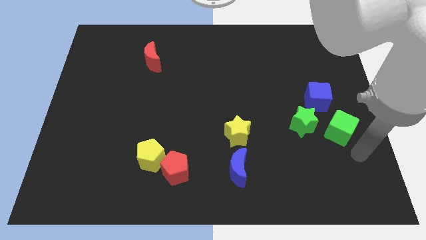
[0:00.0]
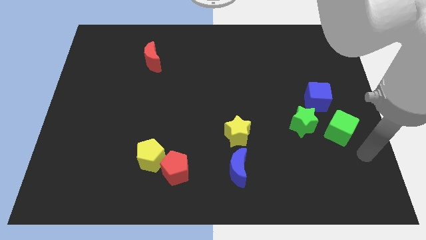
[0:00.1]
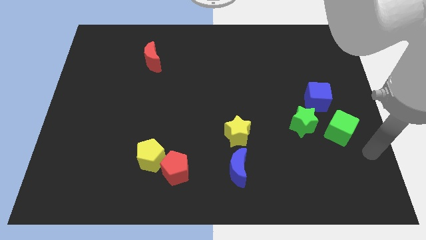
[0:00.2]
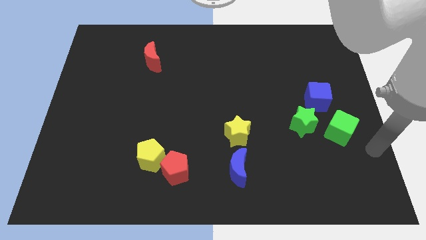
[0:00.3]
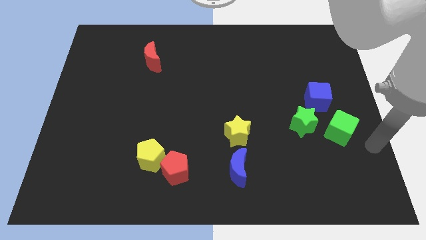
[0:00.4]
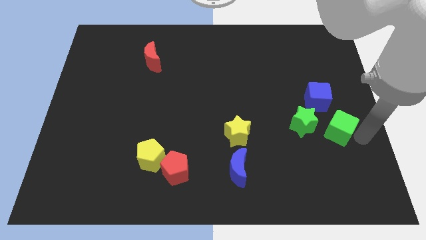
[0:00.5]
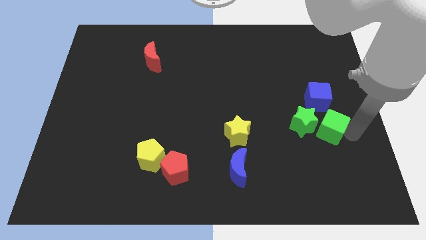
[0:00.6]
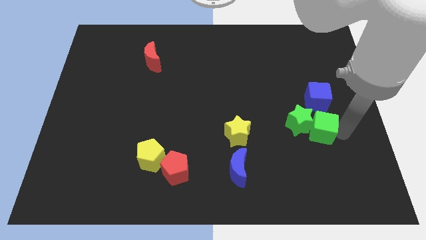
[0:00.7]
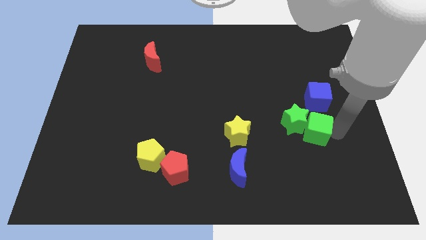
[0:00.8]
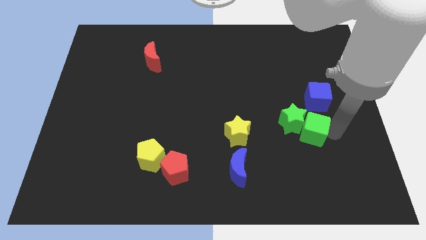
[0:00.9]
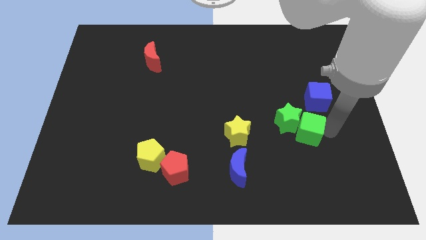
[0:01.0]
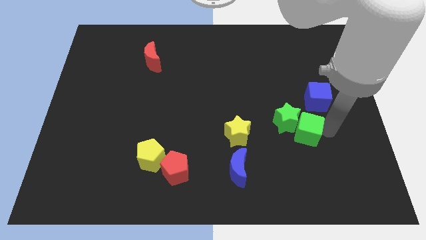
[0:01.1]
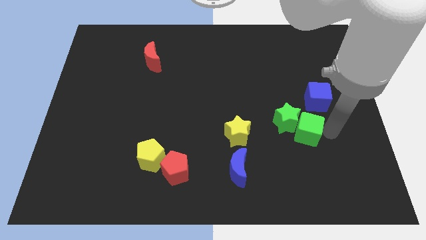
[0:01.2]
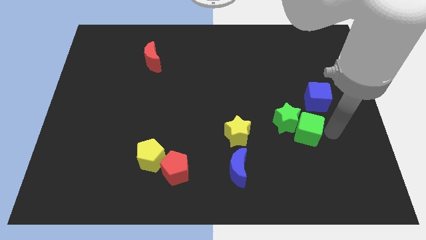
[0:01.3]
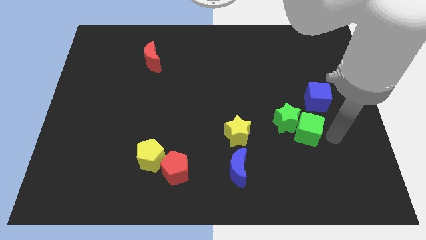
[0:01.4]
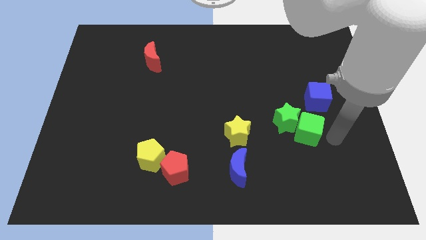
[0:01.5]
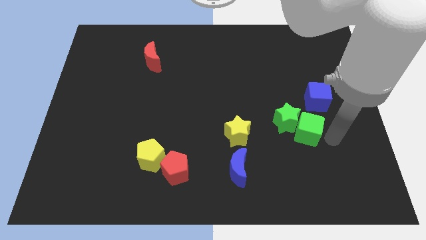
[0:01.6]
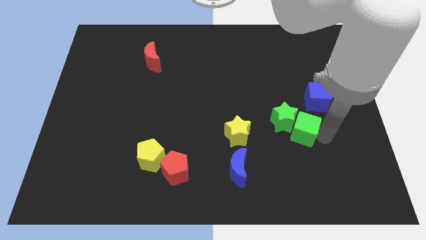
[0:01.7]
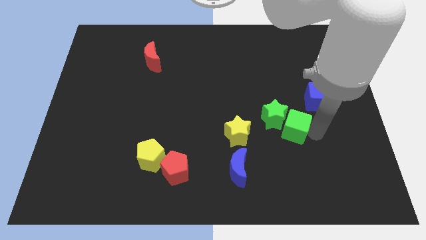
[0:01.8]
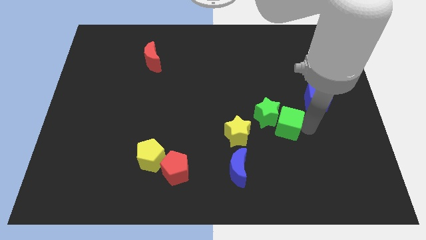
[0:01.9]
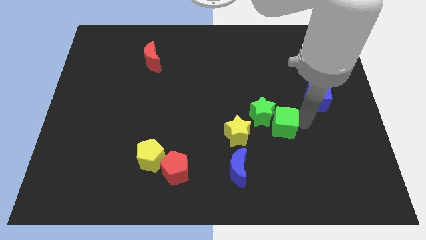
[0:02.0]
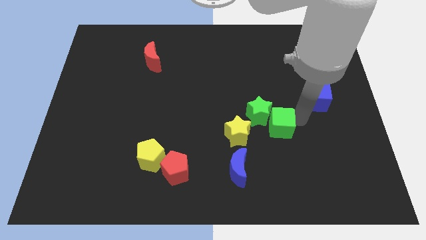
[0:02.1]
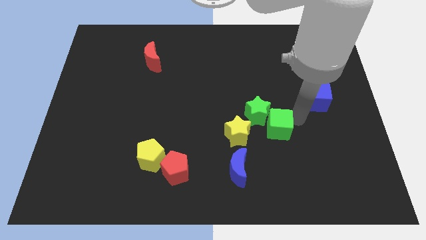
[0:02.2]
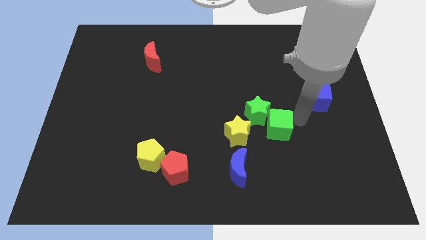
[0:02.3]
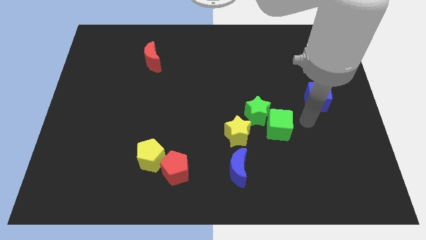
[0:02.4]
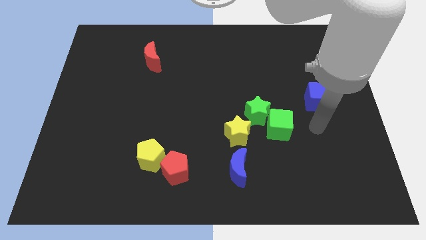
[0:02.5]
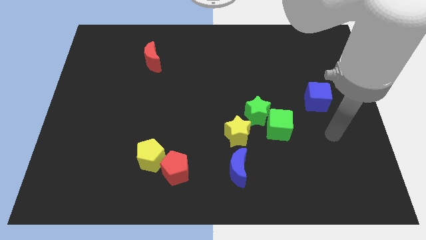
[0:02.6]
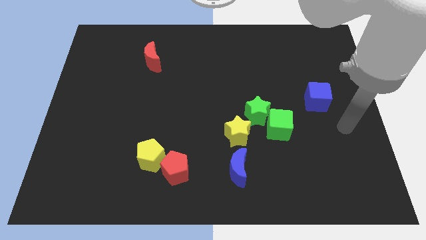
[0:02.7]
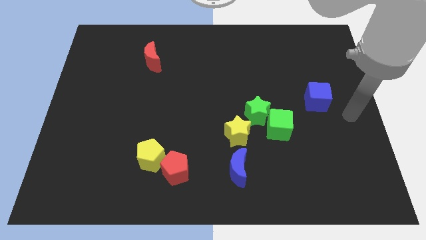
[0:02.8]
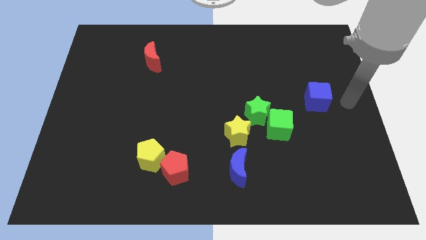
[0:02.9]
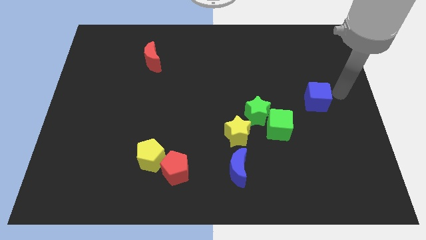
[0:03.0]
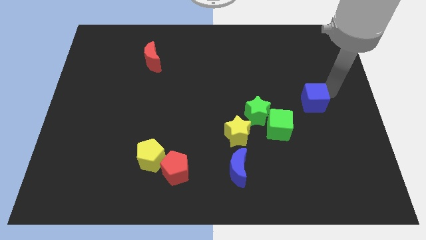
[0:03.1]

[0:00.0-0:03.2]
push both the green blocks to the top right side of the yellow star

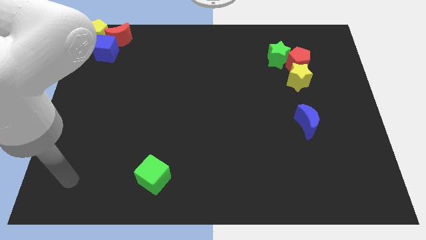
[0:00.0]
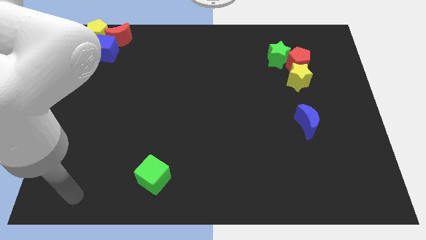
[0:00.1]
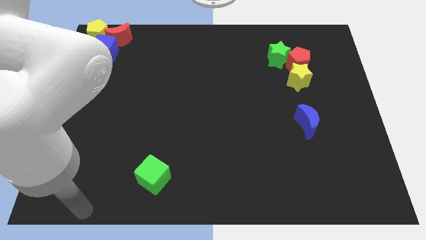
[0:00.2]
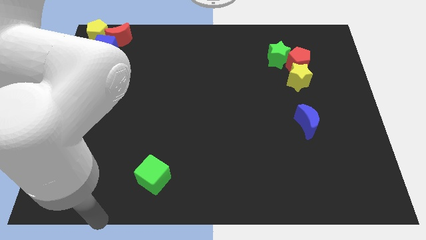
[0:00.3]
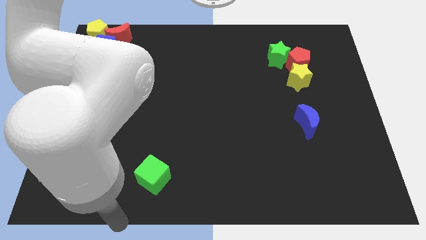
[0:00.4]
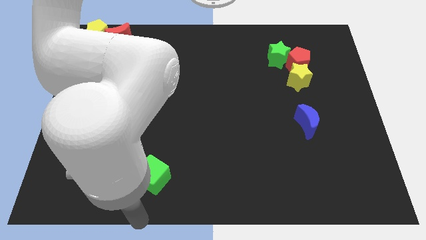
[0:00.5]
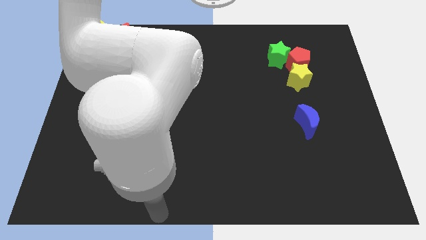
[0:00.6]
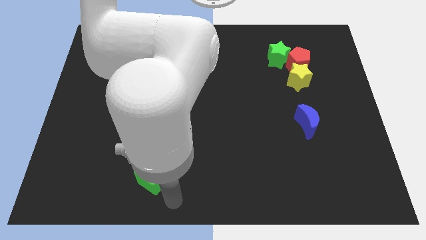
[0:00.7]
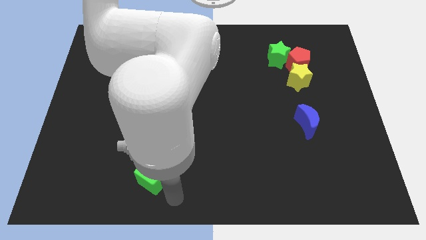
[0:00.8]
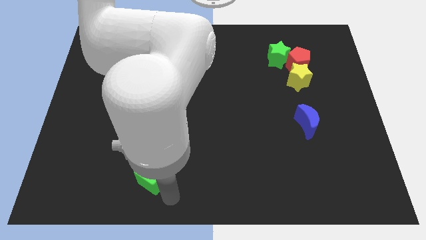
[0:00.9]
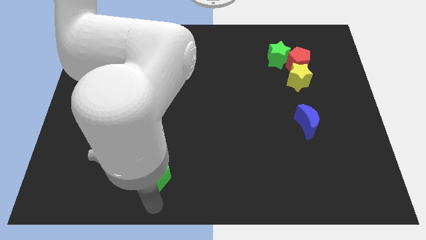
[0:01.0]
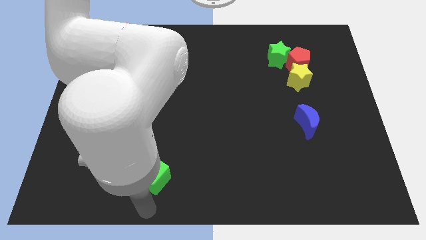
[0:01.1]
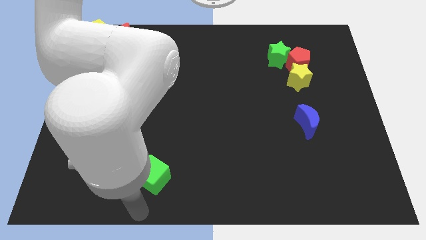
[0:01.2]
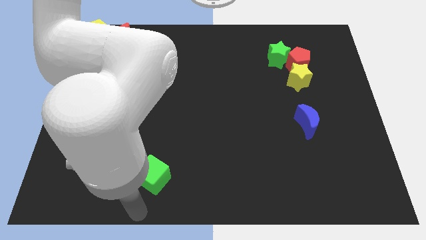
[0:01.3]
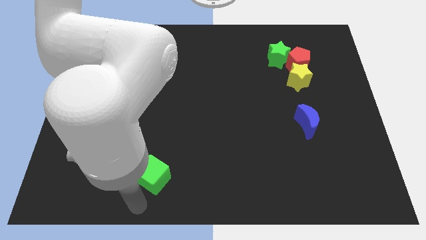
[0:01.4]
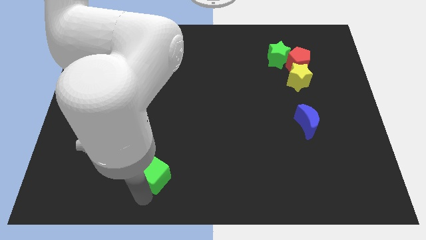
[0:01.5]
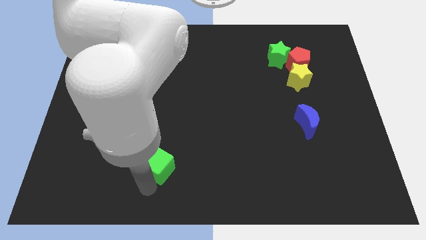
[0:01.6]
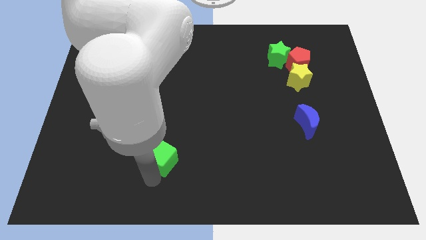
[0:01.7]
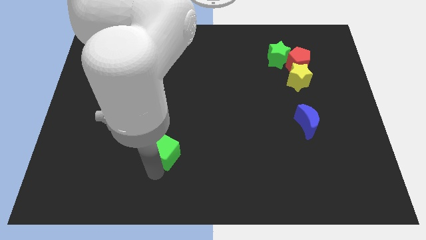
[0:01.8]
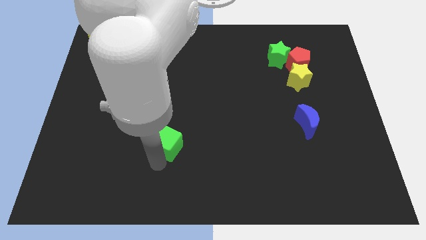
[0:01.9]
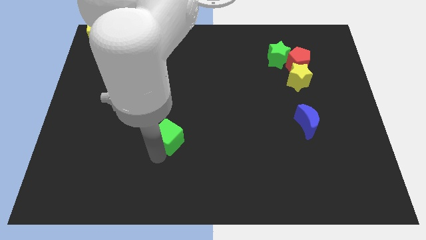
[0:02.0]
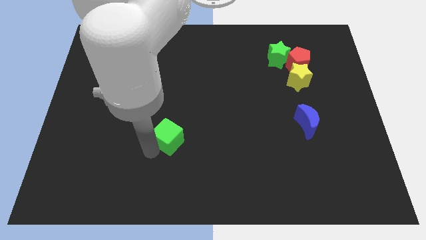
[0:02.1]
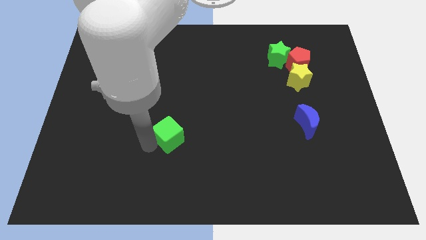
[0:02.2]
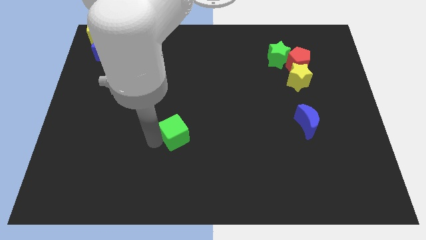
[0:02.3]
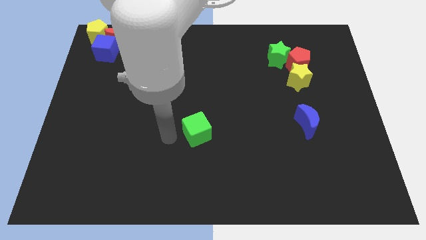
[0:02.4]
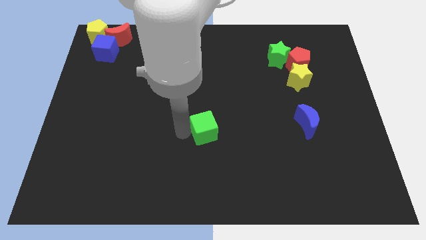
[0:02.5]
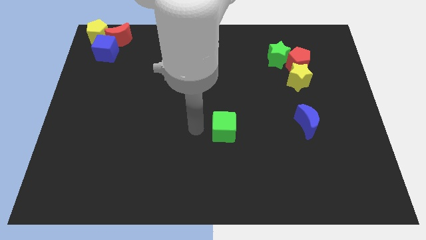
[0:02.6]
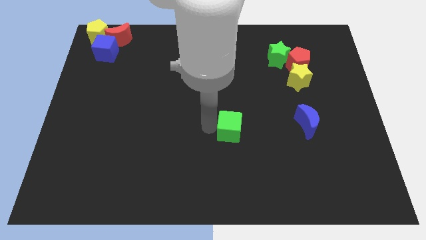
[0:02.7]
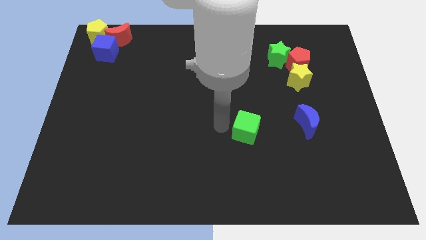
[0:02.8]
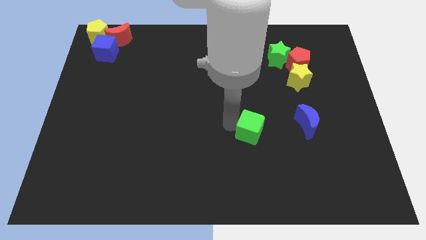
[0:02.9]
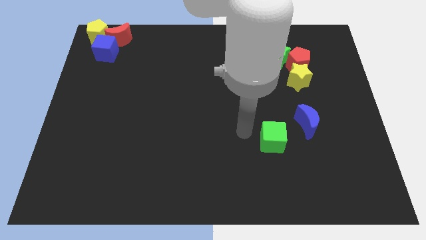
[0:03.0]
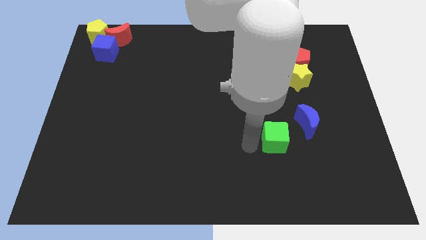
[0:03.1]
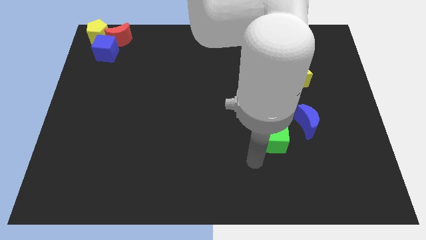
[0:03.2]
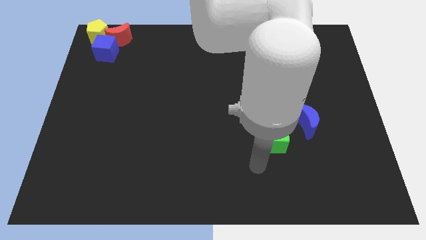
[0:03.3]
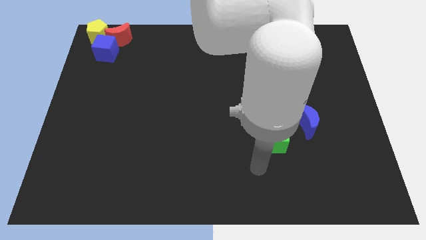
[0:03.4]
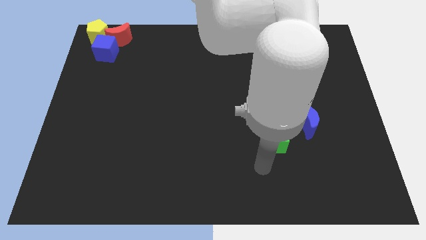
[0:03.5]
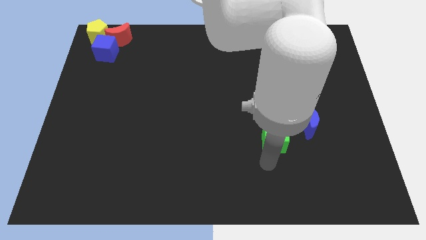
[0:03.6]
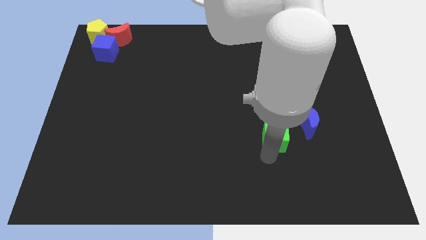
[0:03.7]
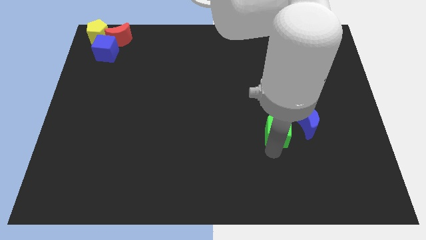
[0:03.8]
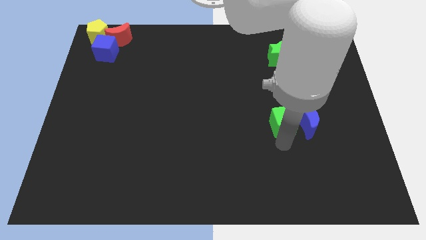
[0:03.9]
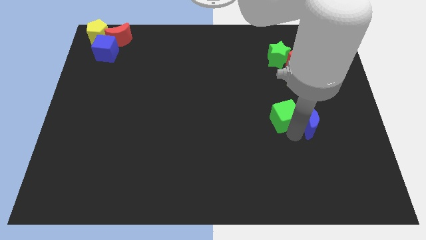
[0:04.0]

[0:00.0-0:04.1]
push the green cube into the blue moon

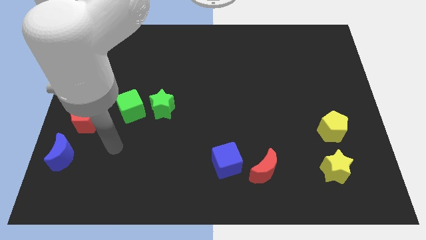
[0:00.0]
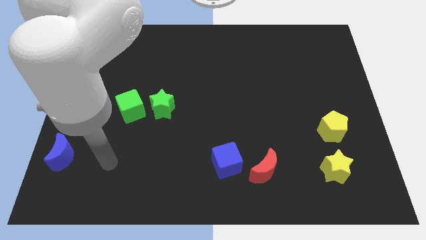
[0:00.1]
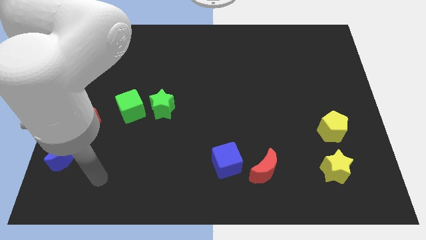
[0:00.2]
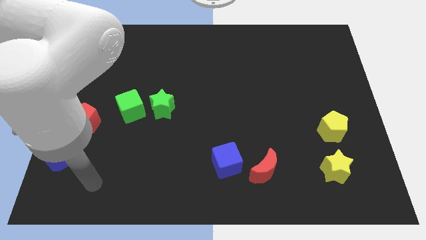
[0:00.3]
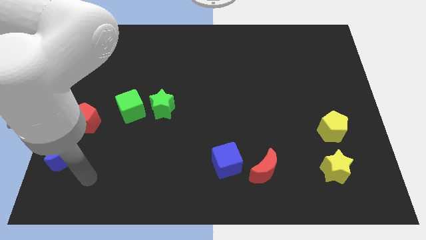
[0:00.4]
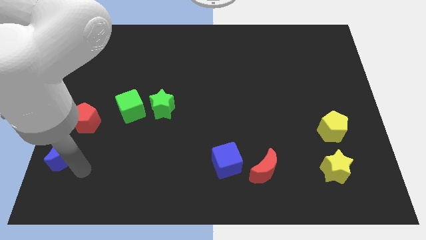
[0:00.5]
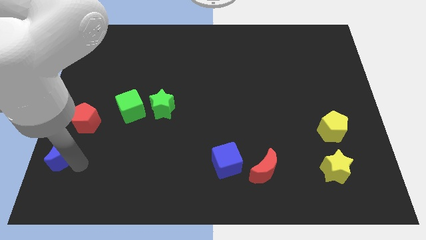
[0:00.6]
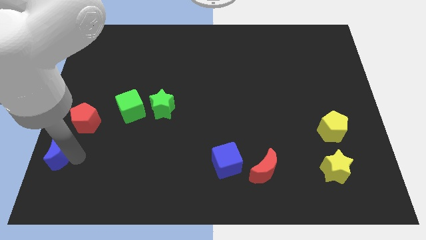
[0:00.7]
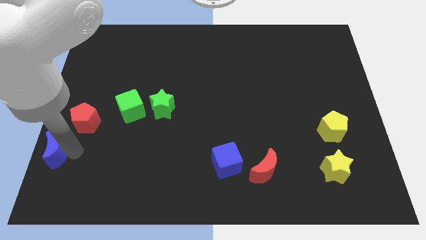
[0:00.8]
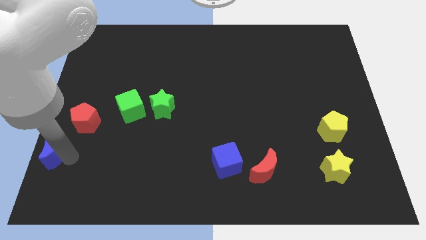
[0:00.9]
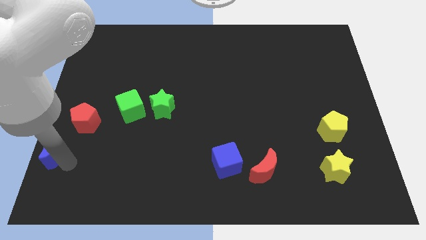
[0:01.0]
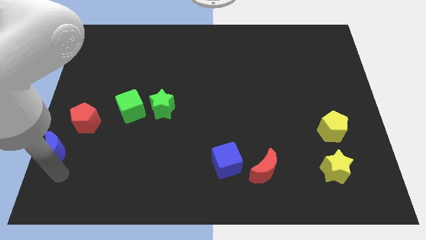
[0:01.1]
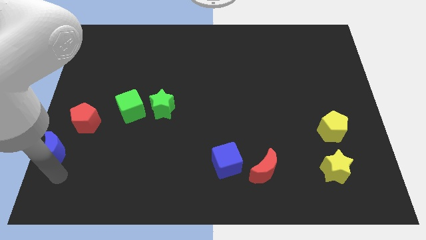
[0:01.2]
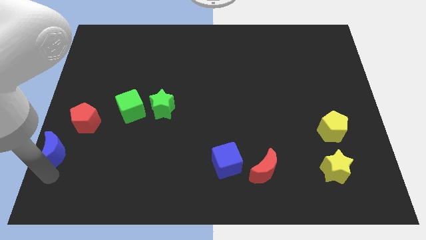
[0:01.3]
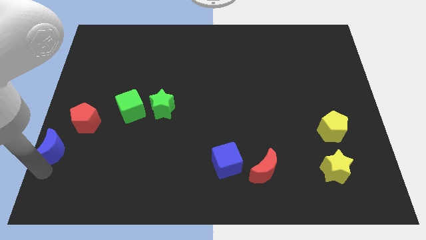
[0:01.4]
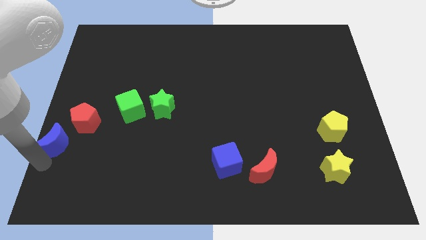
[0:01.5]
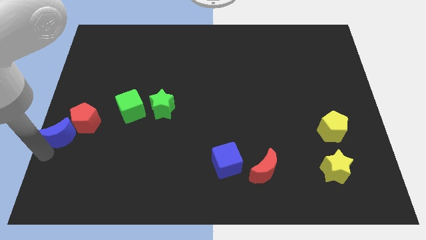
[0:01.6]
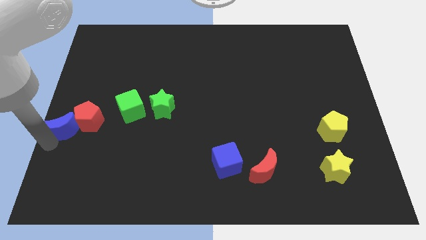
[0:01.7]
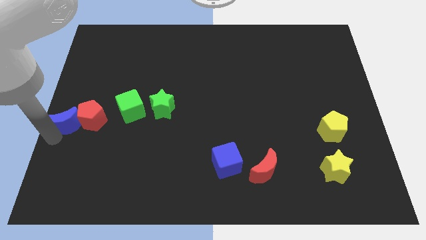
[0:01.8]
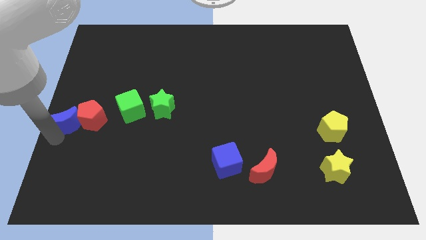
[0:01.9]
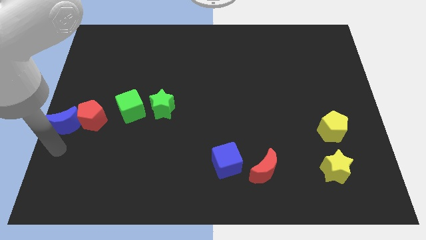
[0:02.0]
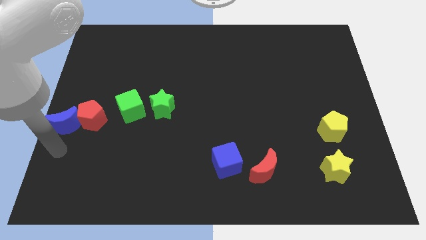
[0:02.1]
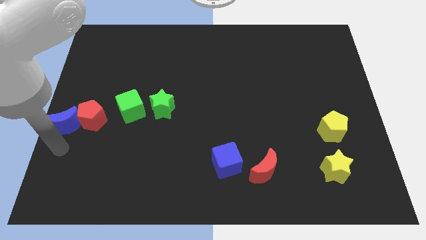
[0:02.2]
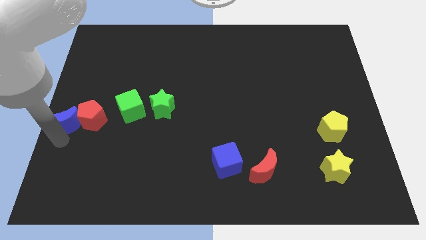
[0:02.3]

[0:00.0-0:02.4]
push the blue crescent to the left of the red pentagon
